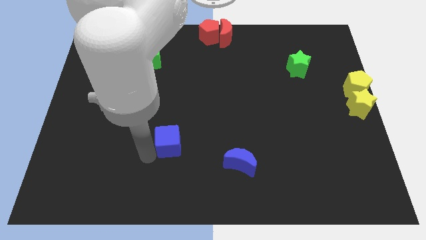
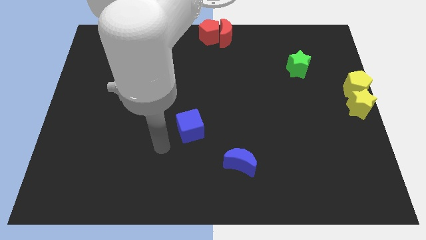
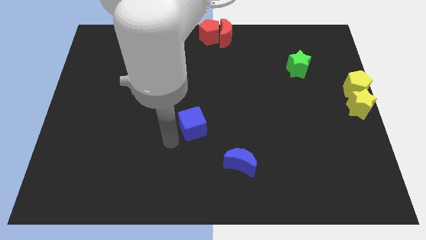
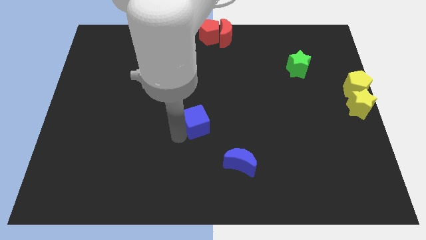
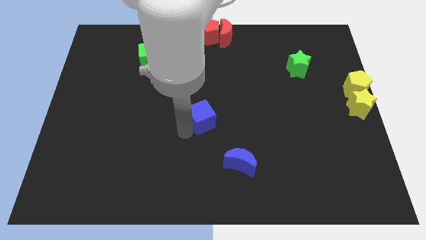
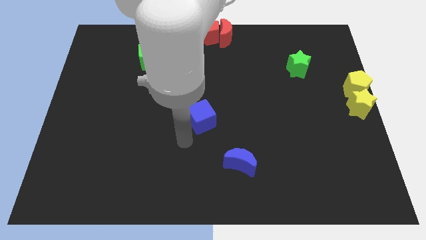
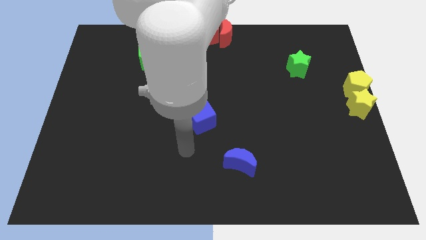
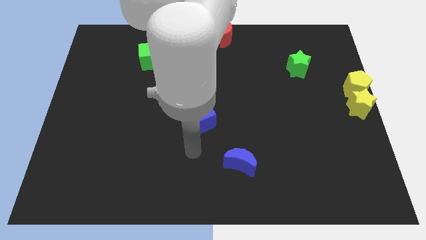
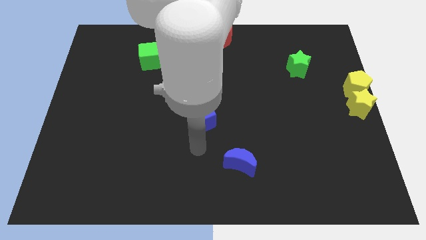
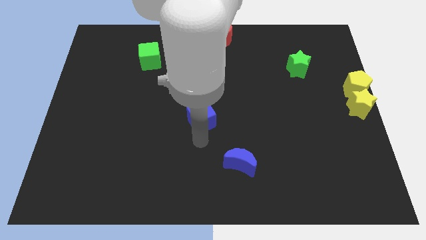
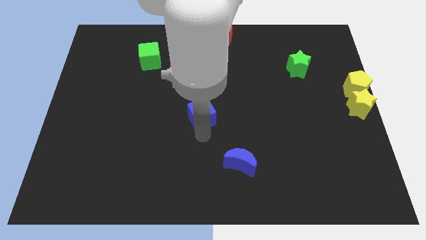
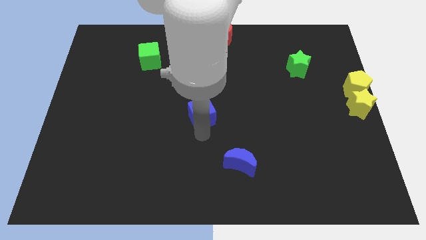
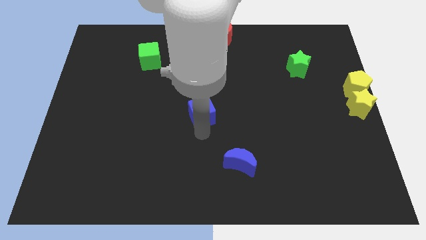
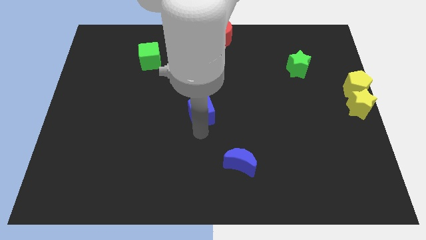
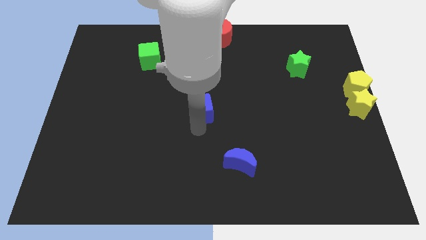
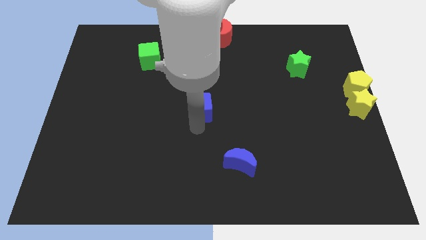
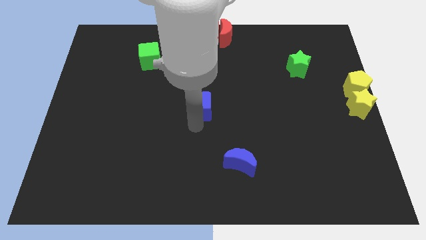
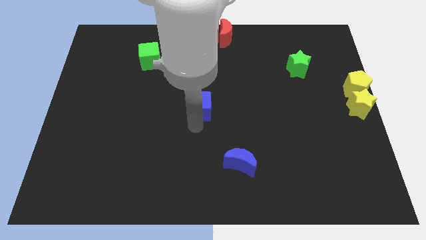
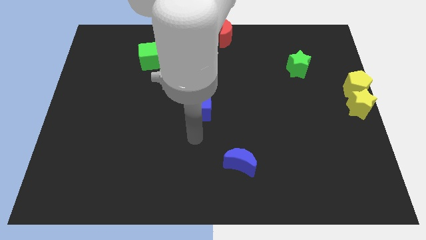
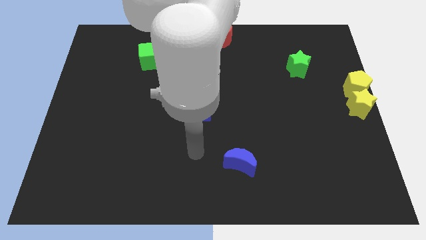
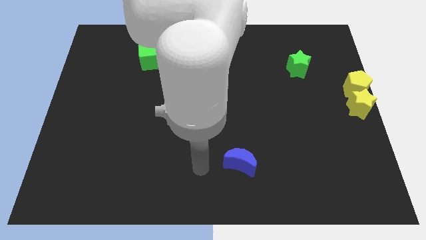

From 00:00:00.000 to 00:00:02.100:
push the blue cube to the center of the board

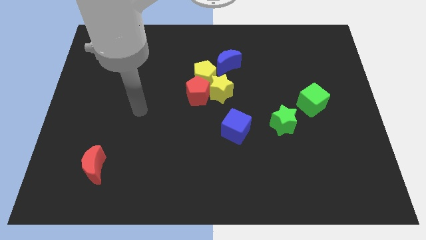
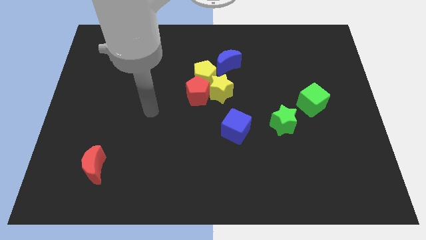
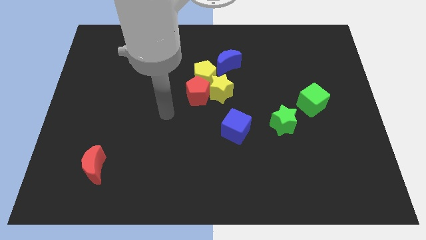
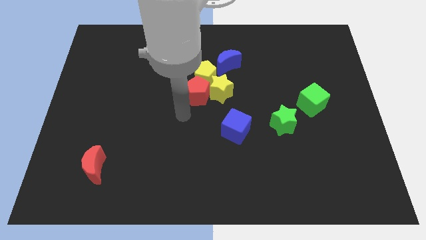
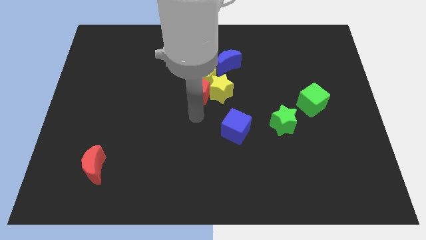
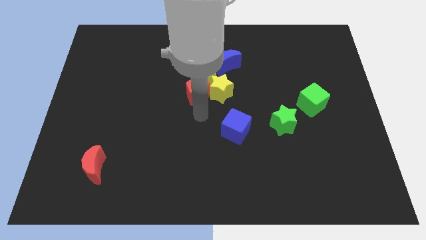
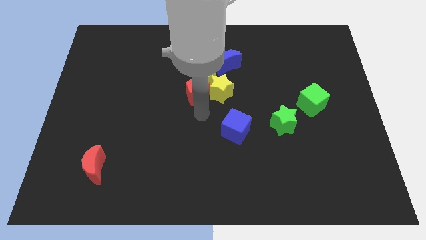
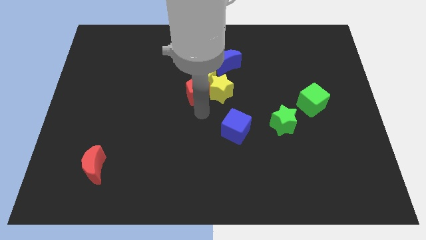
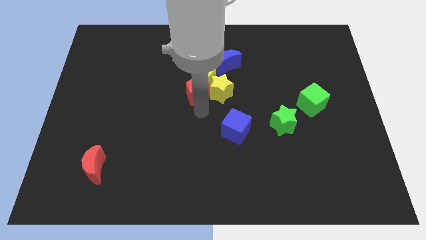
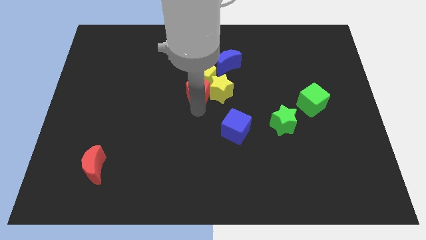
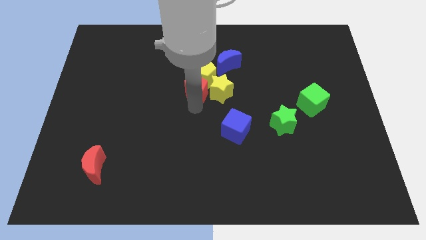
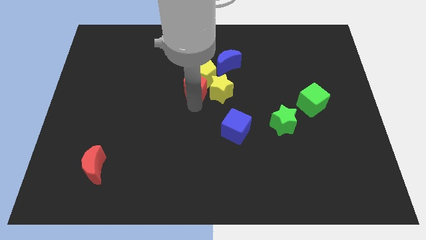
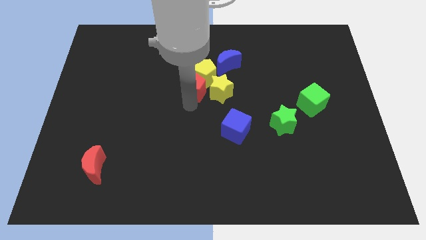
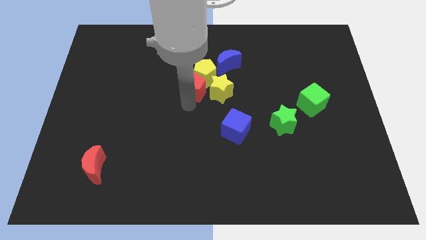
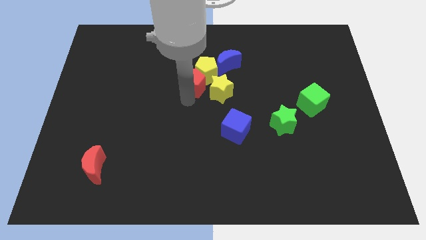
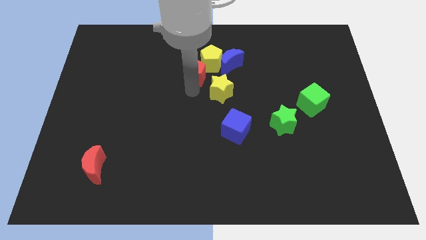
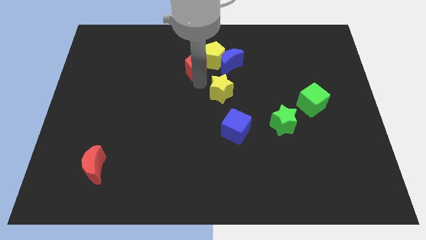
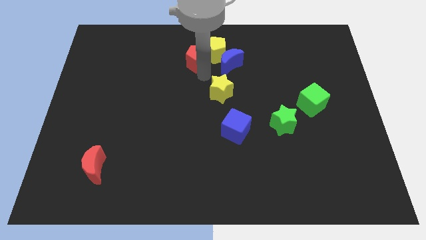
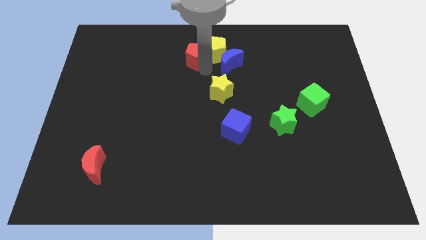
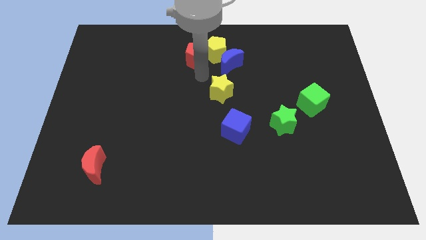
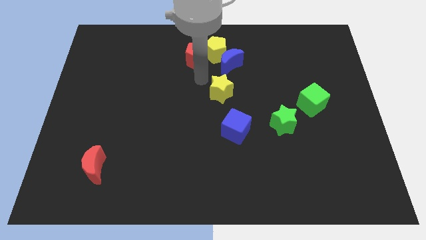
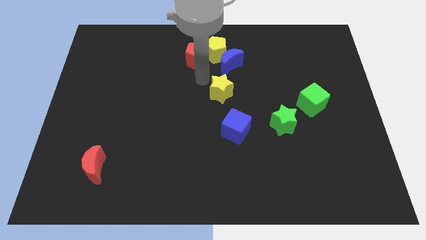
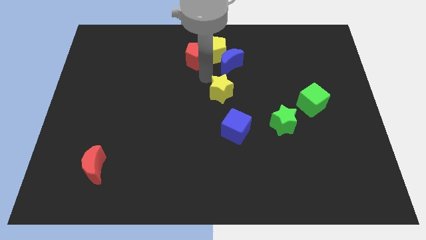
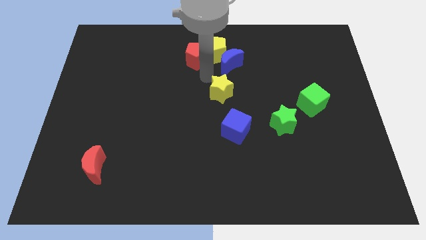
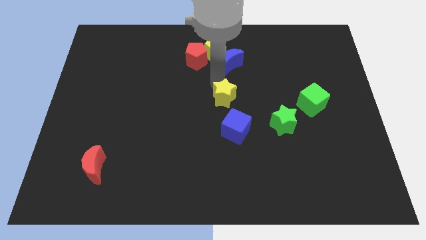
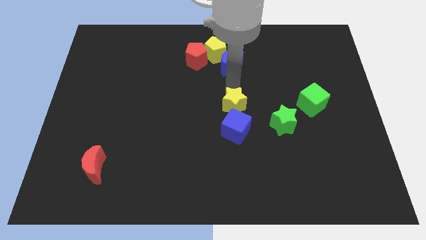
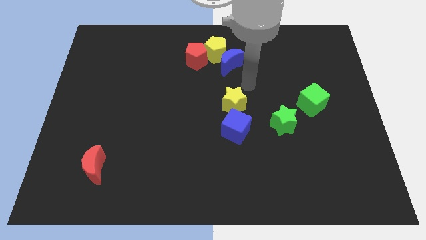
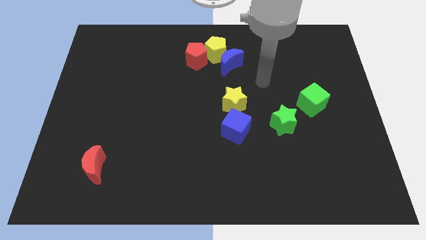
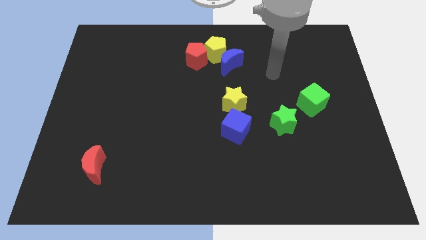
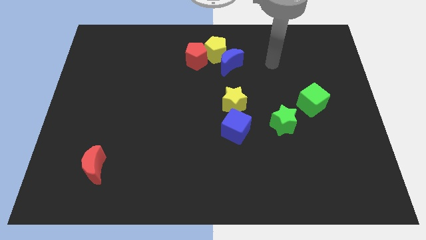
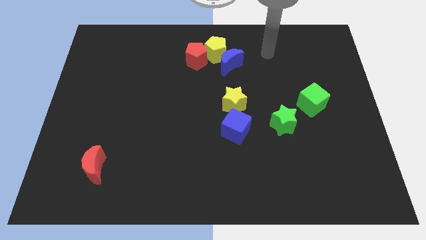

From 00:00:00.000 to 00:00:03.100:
push the group of blocks towards the top center

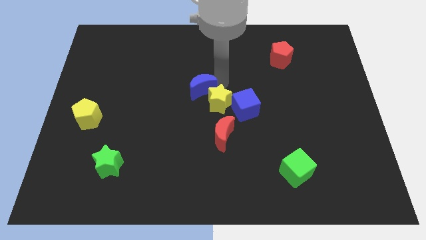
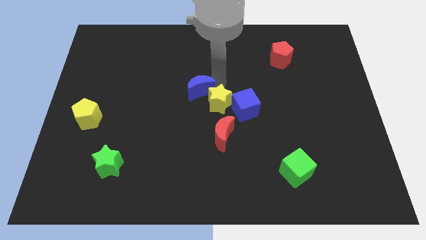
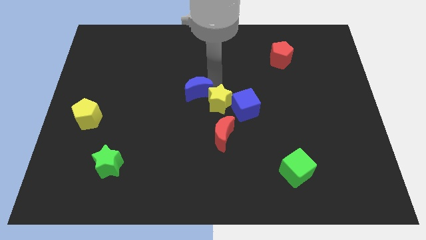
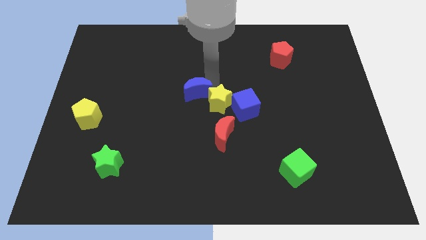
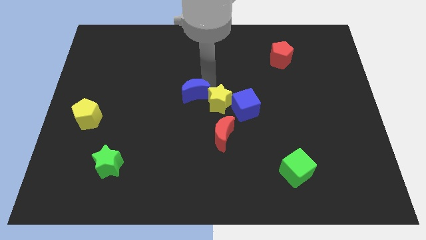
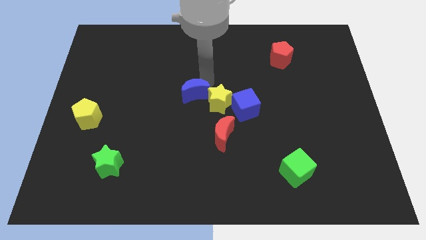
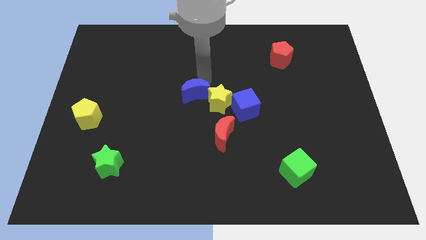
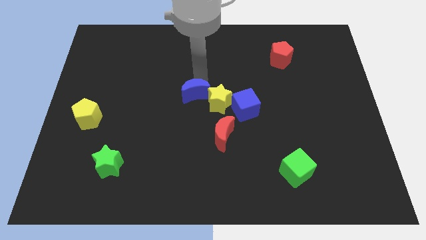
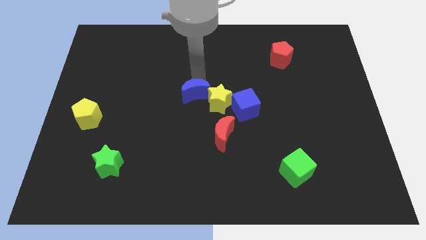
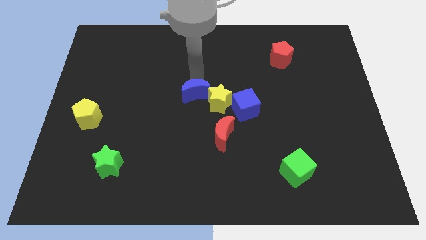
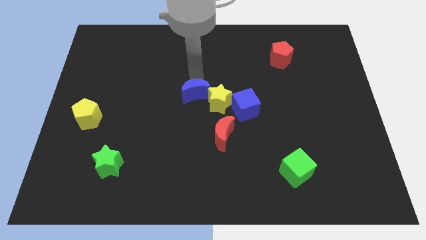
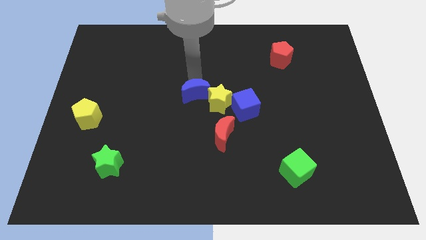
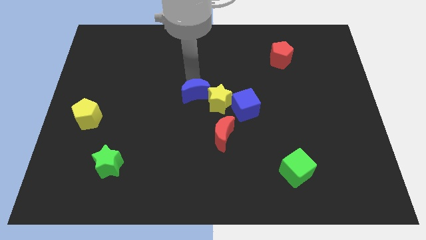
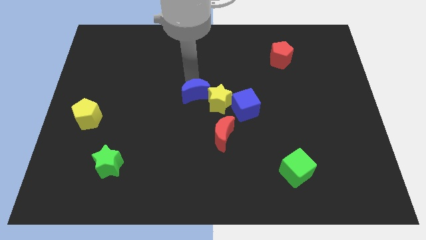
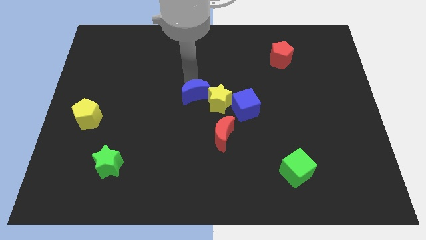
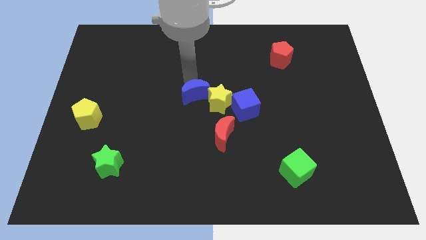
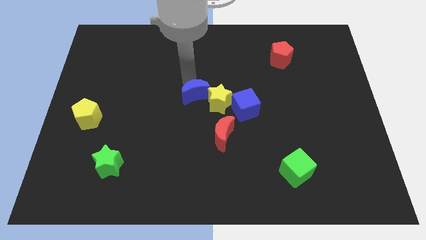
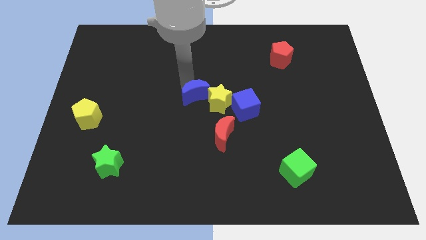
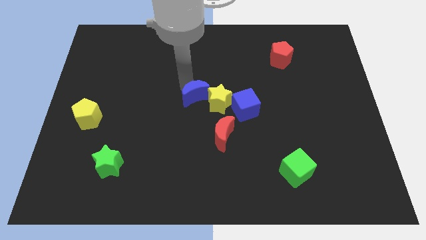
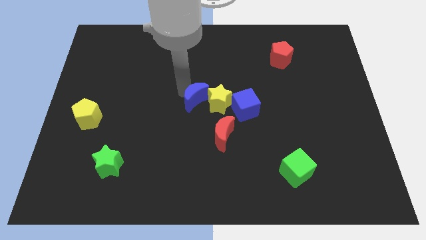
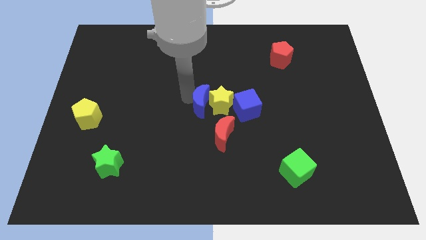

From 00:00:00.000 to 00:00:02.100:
push the blue crescent into the yellow star

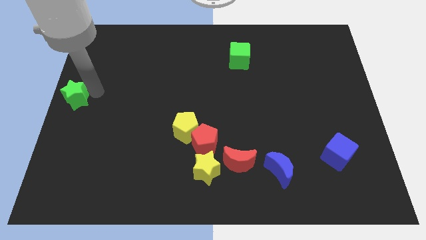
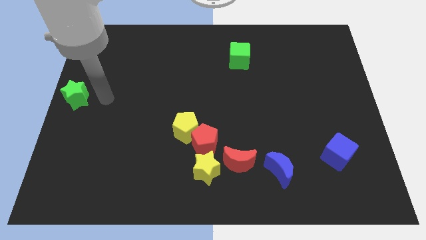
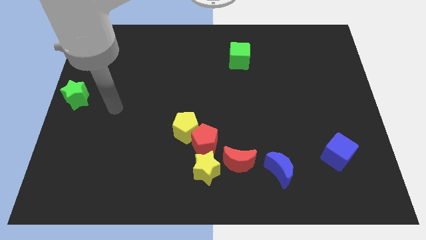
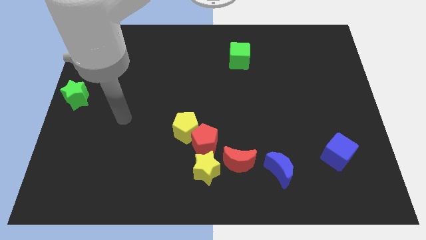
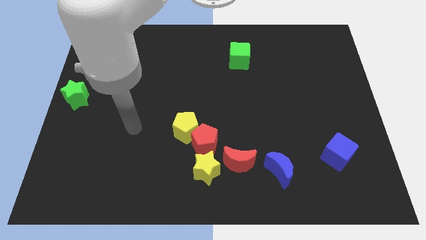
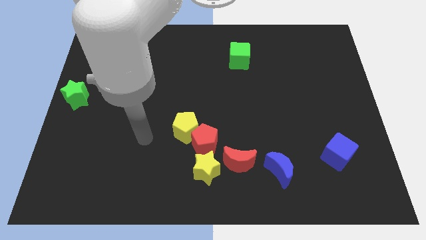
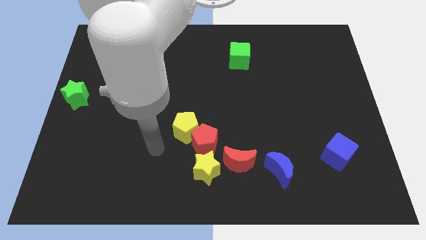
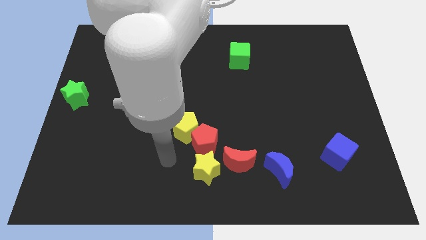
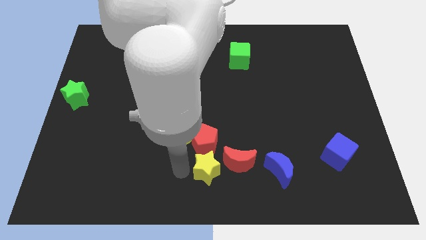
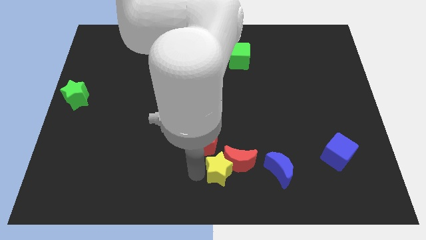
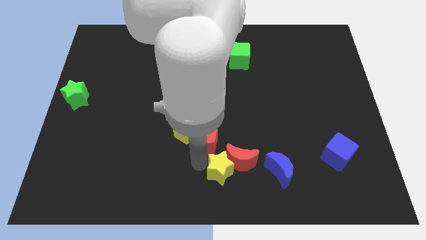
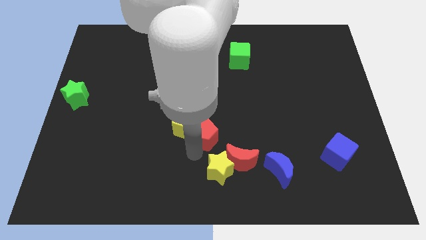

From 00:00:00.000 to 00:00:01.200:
push the yellow star slightly into the left side of the red moon

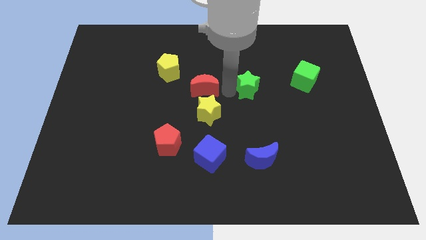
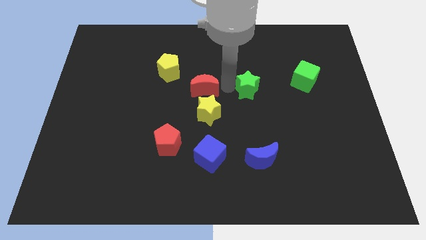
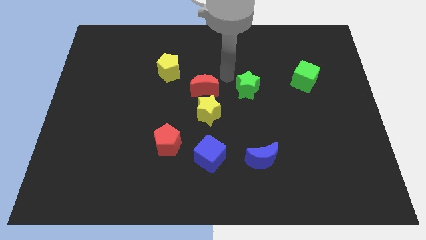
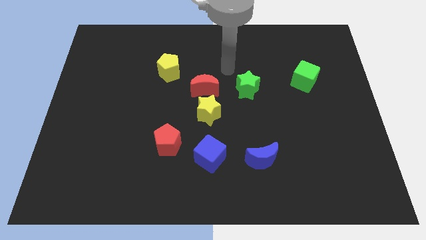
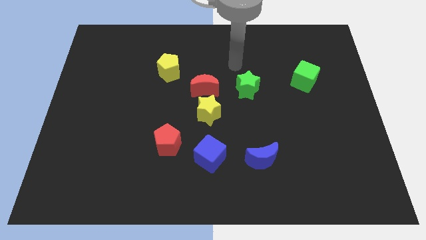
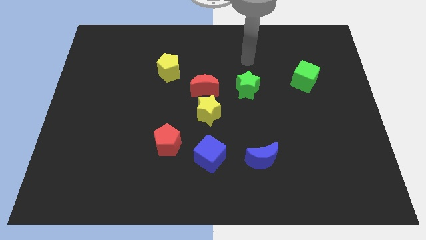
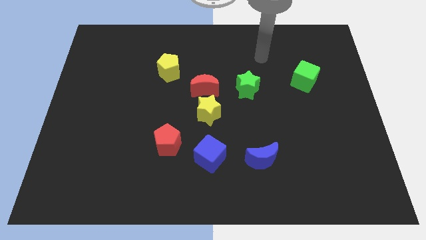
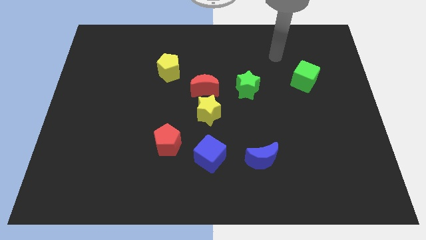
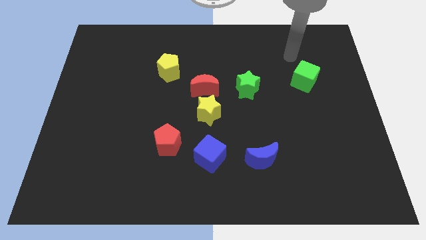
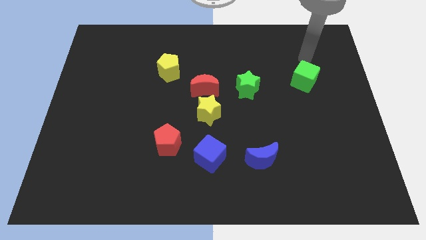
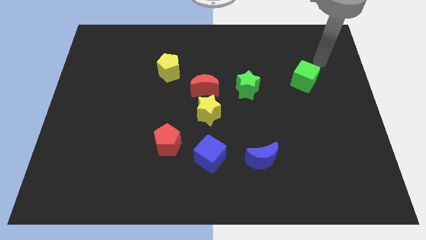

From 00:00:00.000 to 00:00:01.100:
move the arm above the green cube
